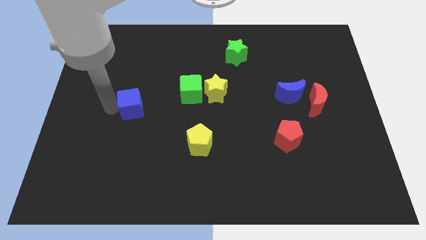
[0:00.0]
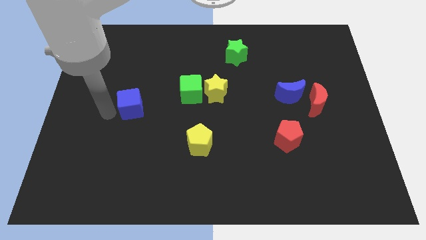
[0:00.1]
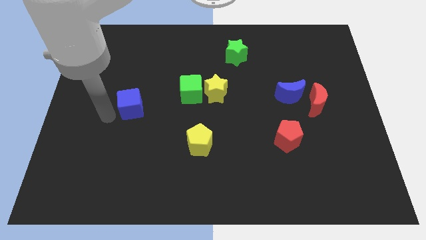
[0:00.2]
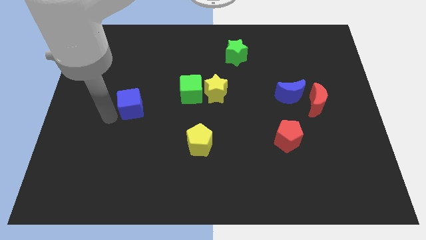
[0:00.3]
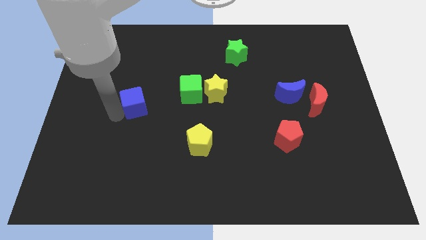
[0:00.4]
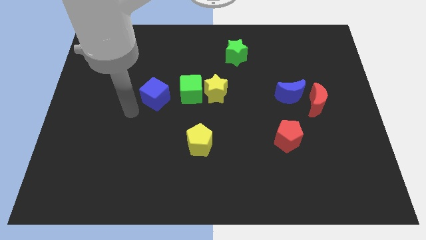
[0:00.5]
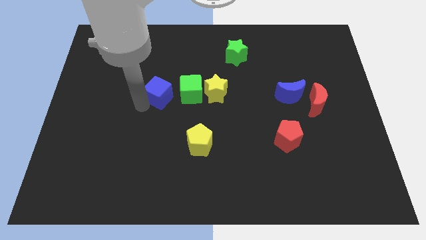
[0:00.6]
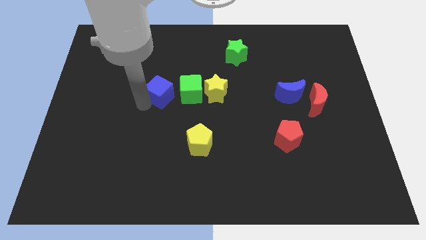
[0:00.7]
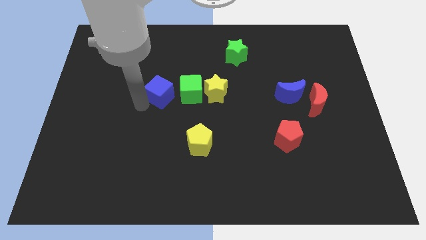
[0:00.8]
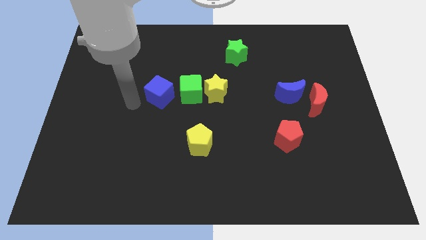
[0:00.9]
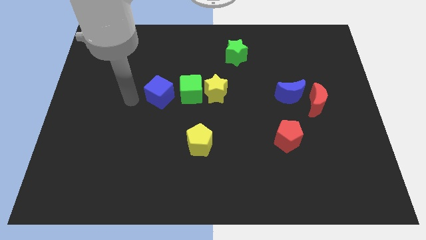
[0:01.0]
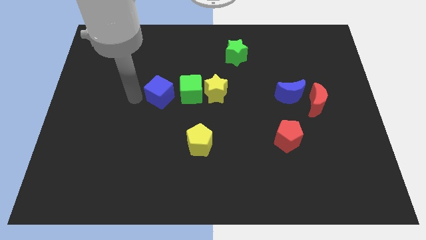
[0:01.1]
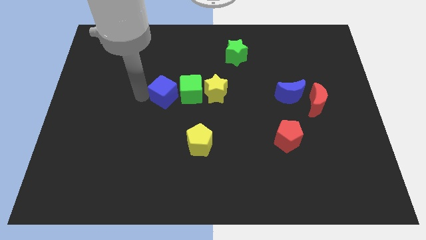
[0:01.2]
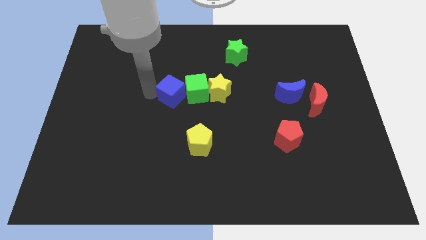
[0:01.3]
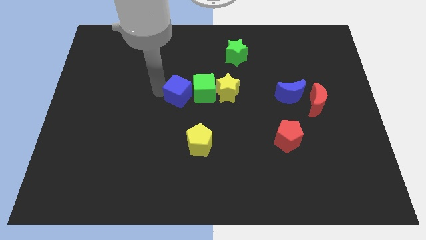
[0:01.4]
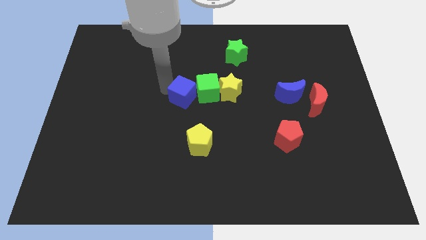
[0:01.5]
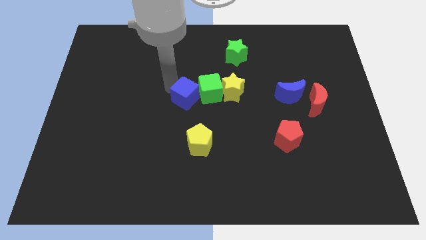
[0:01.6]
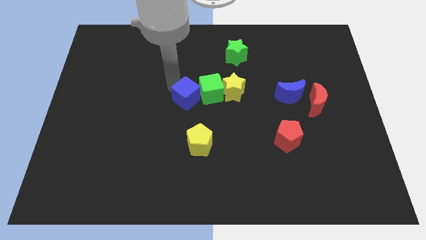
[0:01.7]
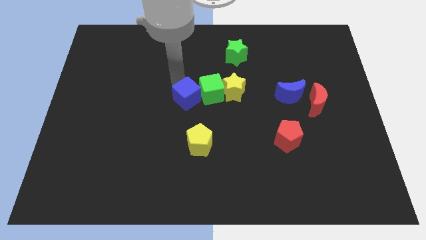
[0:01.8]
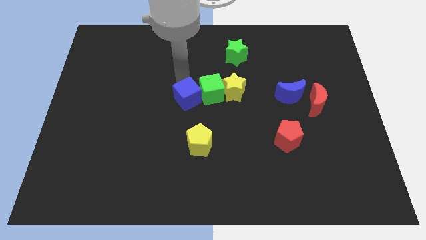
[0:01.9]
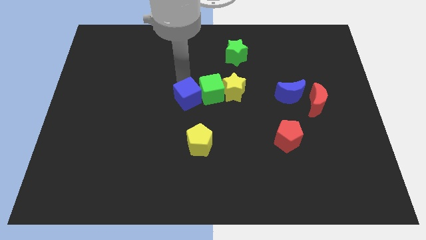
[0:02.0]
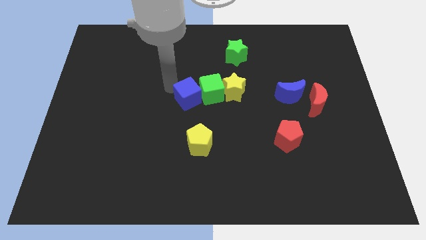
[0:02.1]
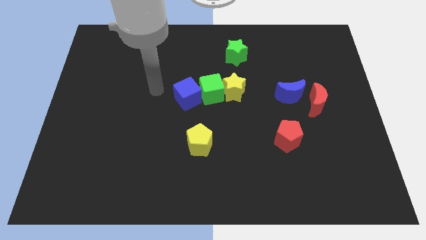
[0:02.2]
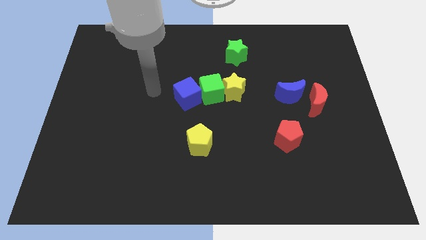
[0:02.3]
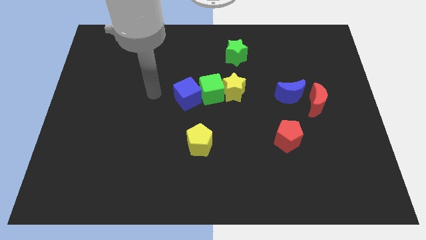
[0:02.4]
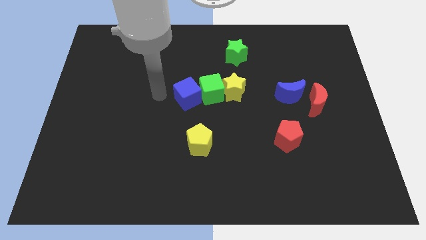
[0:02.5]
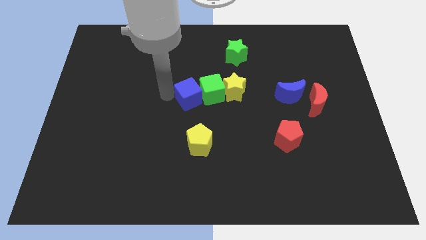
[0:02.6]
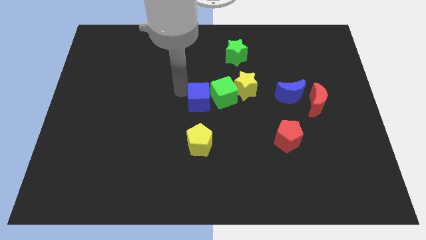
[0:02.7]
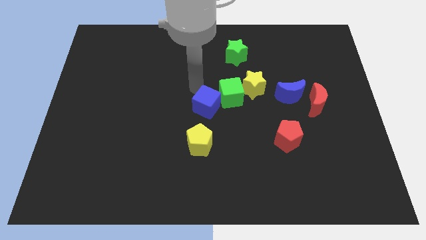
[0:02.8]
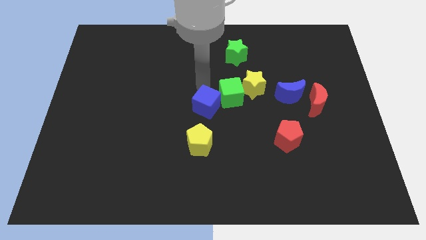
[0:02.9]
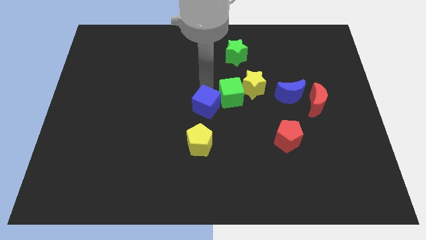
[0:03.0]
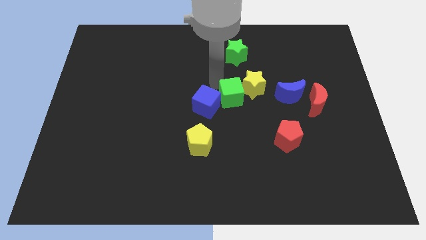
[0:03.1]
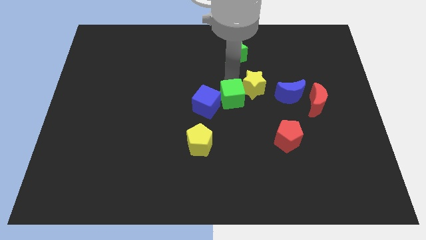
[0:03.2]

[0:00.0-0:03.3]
push the blue cube into the green cube

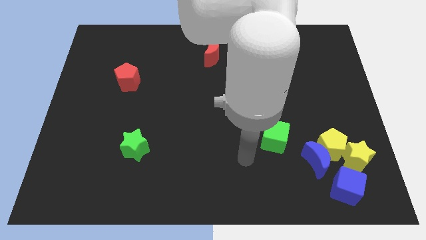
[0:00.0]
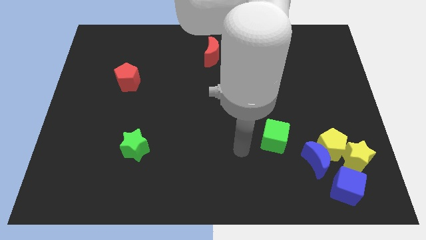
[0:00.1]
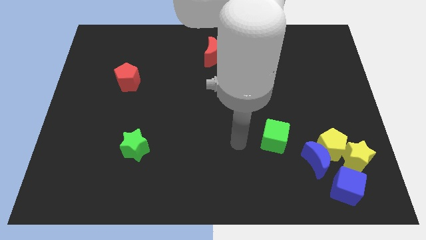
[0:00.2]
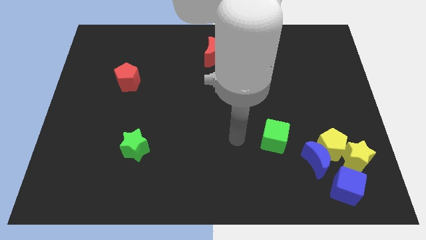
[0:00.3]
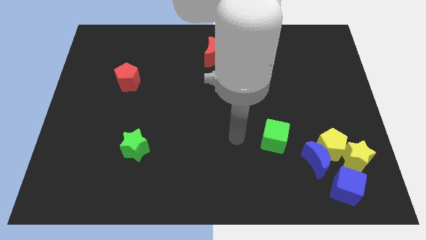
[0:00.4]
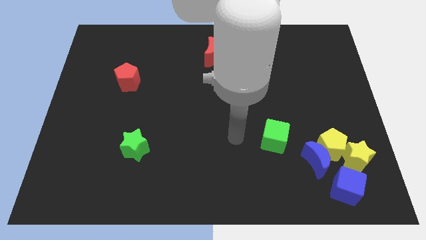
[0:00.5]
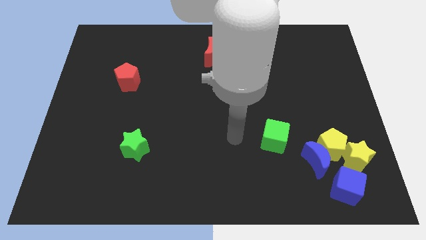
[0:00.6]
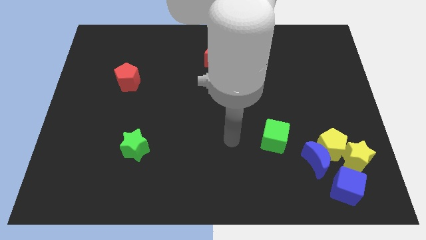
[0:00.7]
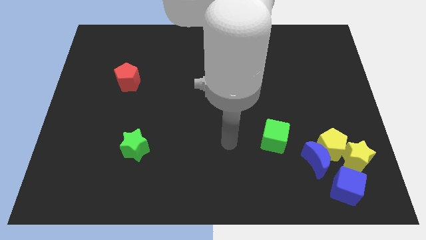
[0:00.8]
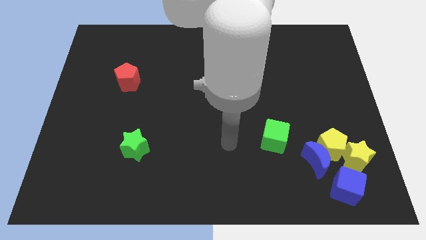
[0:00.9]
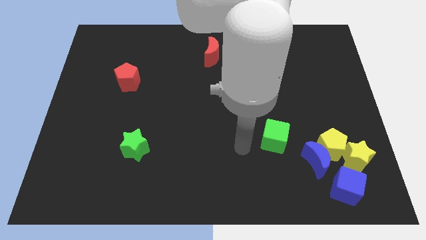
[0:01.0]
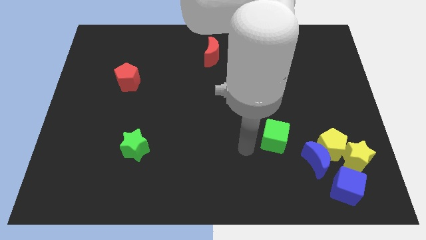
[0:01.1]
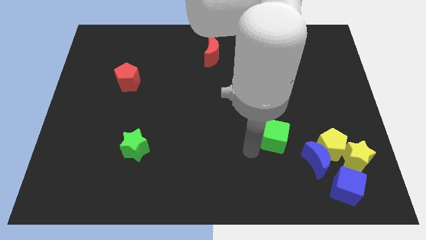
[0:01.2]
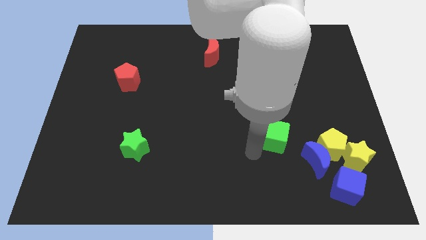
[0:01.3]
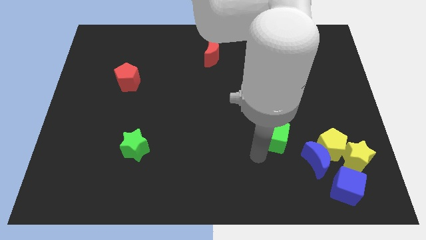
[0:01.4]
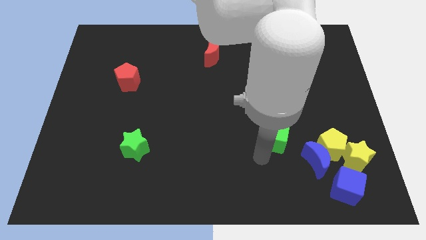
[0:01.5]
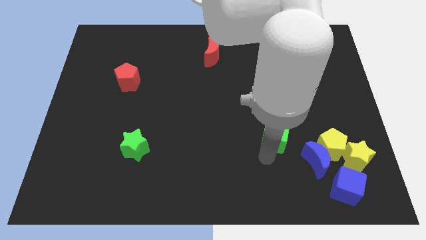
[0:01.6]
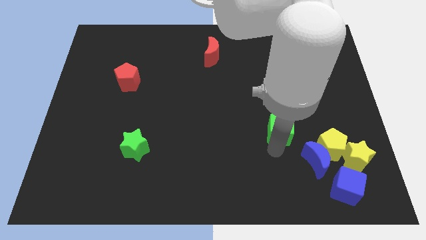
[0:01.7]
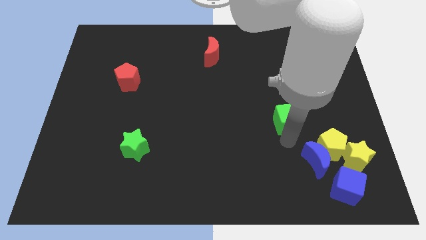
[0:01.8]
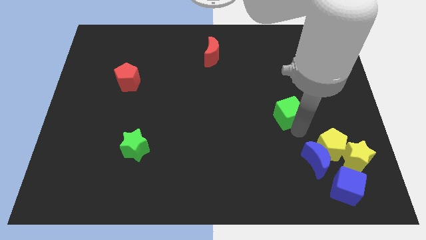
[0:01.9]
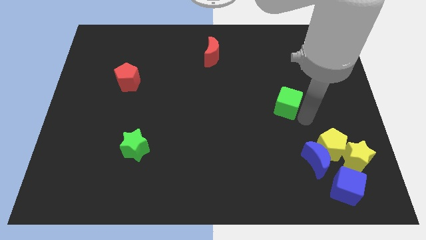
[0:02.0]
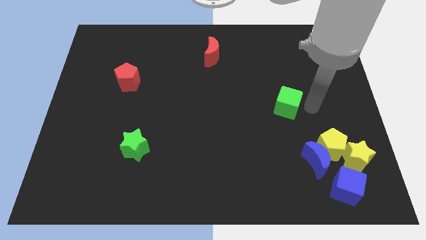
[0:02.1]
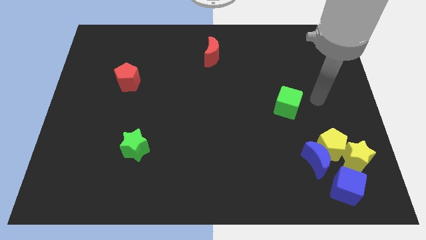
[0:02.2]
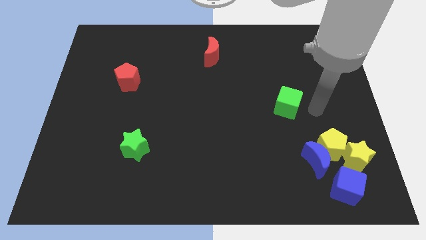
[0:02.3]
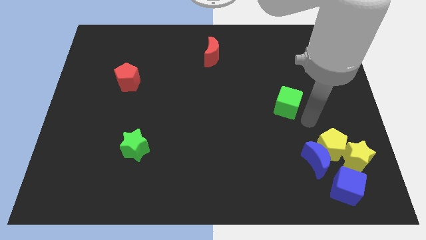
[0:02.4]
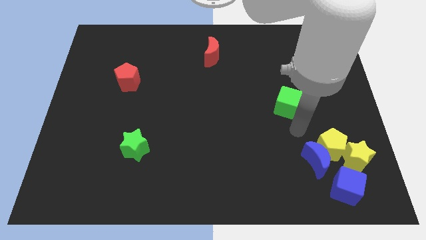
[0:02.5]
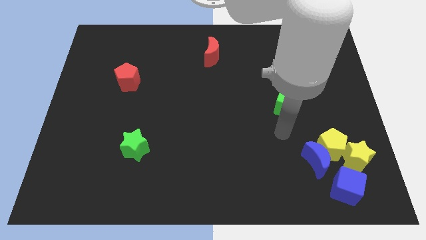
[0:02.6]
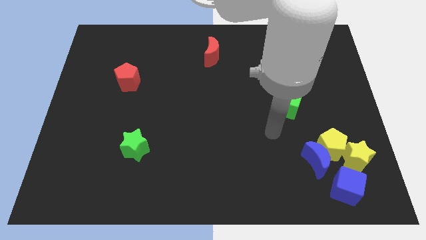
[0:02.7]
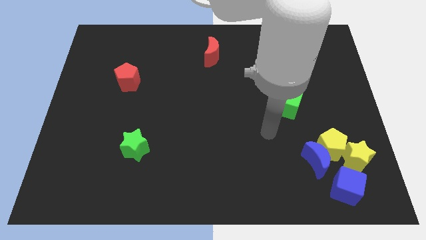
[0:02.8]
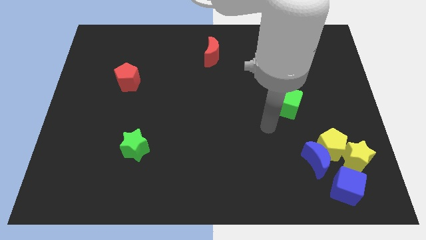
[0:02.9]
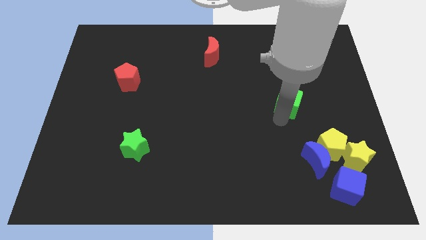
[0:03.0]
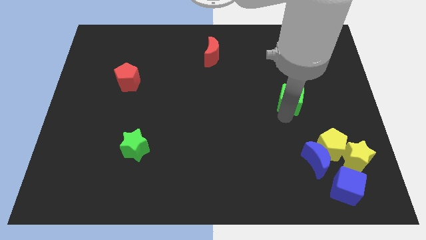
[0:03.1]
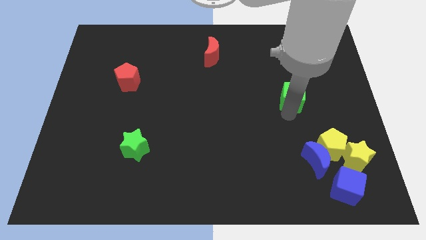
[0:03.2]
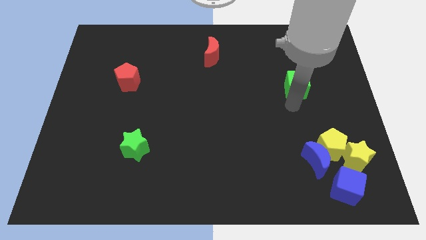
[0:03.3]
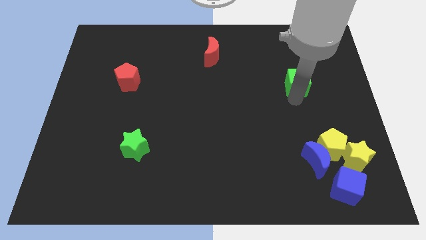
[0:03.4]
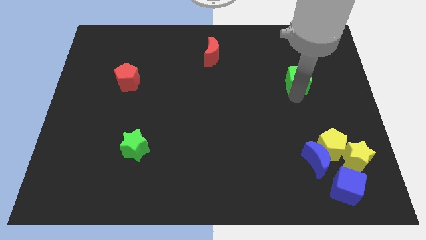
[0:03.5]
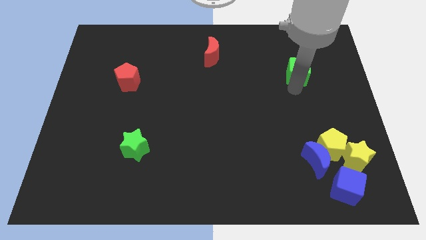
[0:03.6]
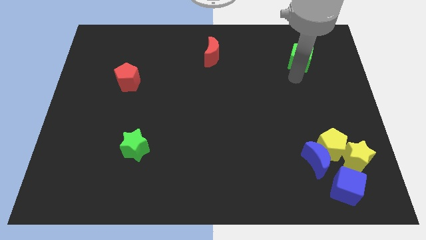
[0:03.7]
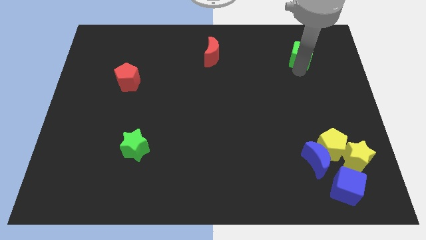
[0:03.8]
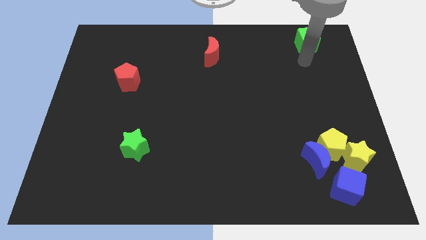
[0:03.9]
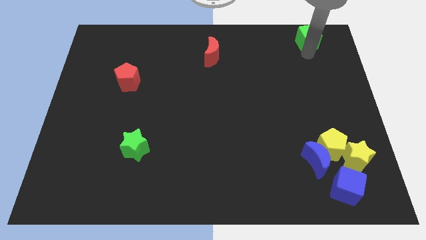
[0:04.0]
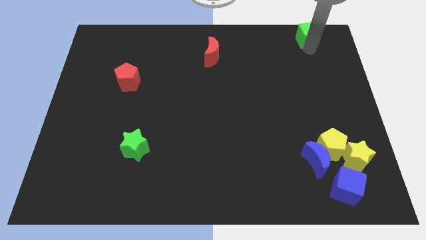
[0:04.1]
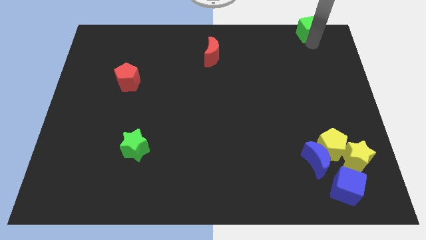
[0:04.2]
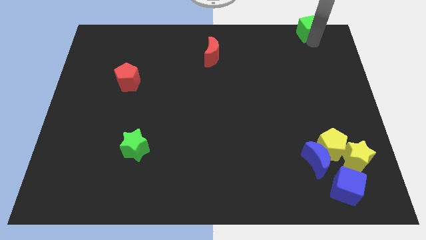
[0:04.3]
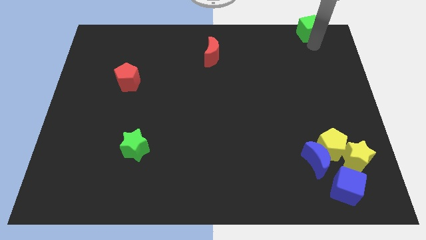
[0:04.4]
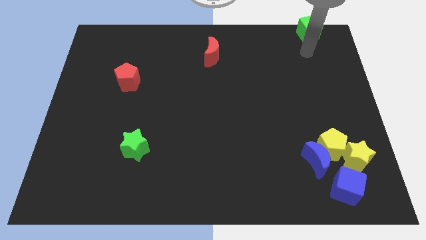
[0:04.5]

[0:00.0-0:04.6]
push the green cube to the top of the board

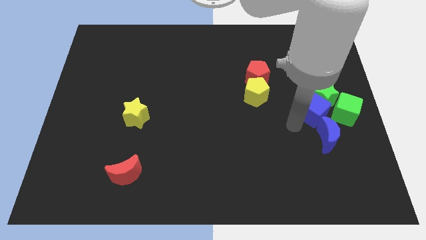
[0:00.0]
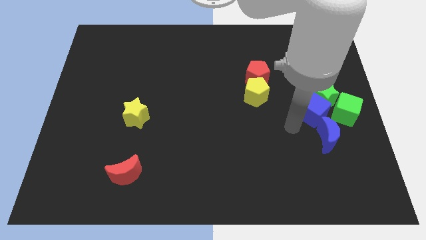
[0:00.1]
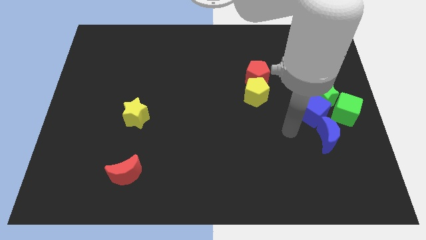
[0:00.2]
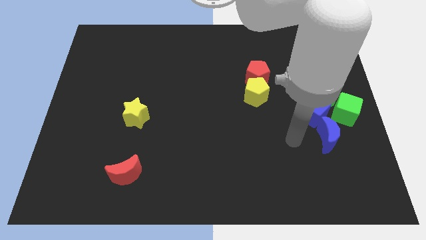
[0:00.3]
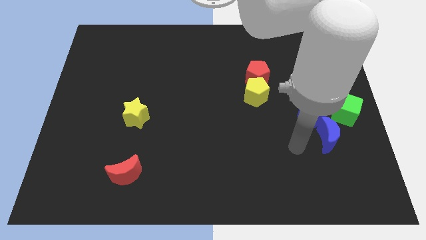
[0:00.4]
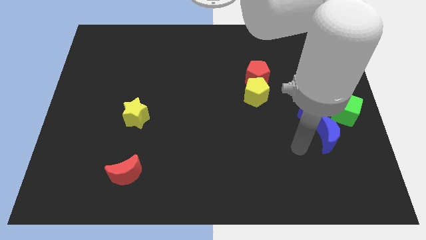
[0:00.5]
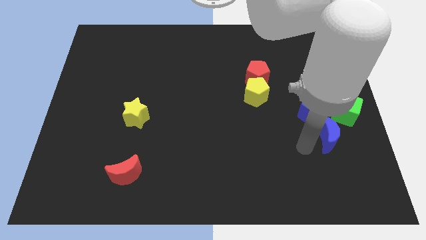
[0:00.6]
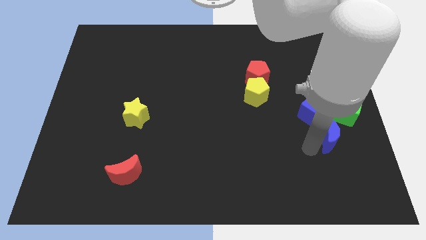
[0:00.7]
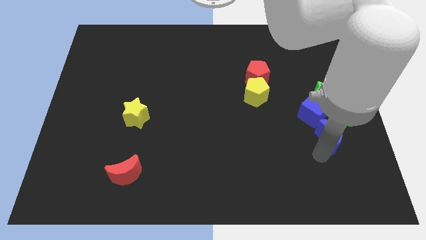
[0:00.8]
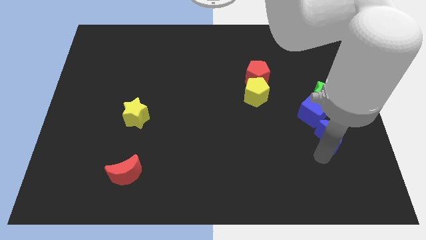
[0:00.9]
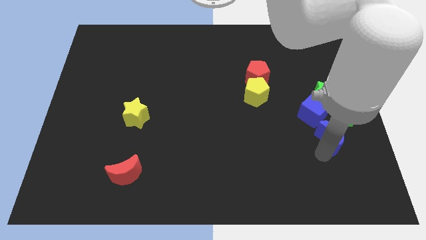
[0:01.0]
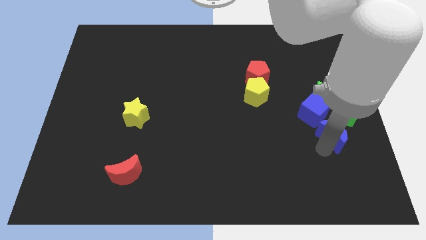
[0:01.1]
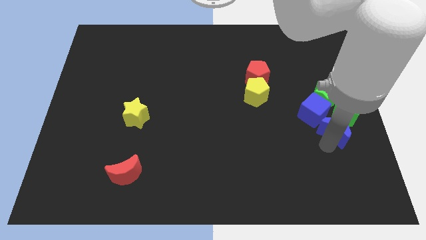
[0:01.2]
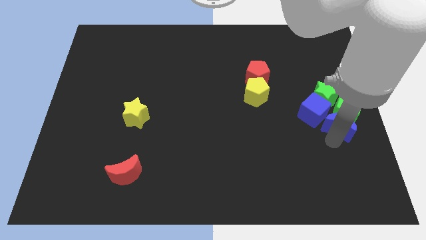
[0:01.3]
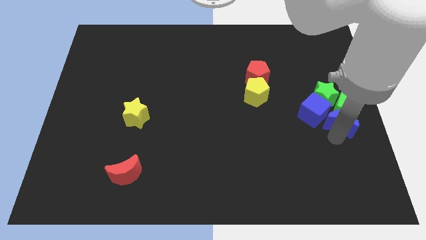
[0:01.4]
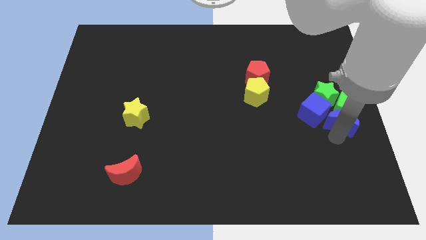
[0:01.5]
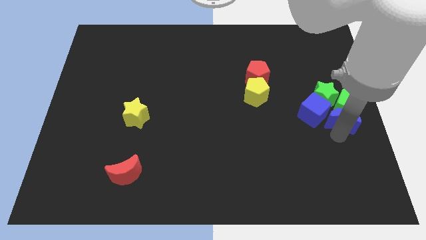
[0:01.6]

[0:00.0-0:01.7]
slightly push the blue crescent towards the green cube
